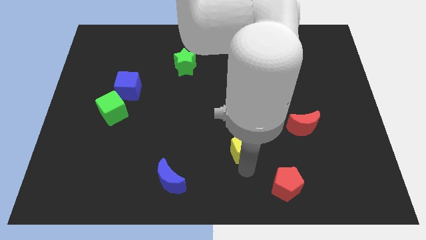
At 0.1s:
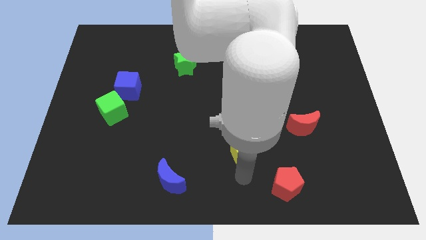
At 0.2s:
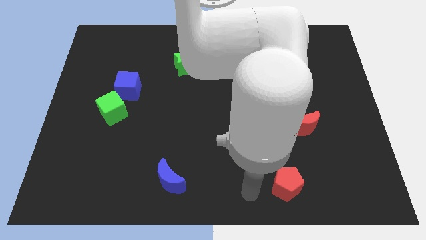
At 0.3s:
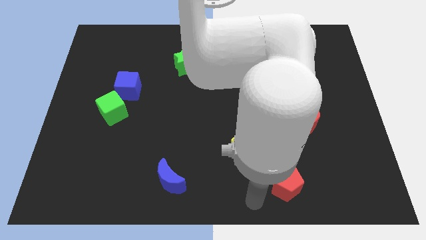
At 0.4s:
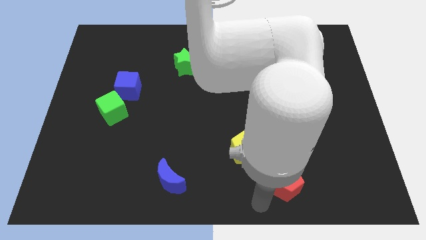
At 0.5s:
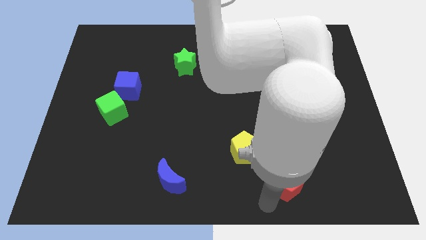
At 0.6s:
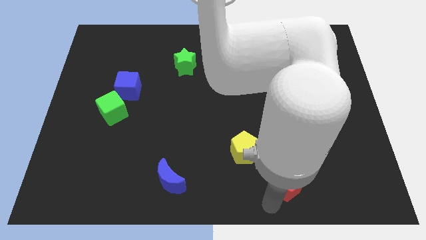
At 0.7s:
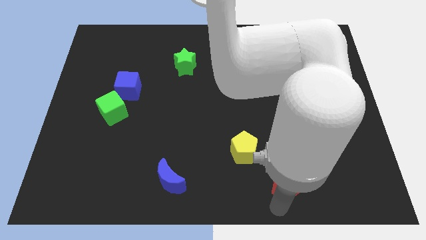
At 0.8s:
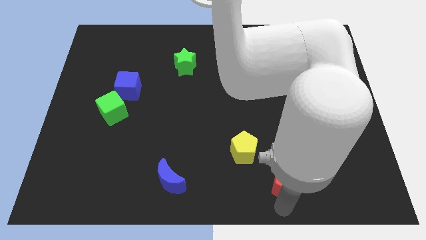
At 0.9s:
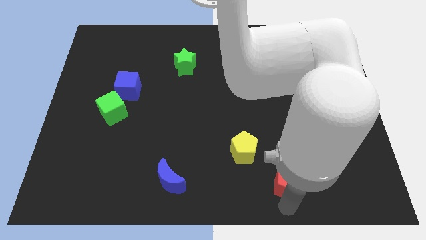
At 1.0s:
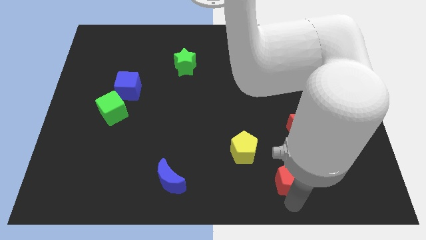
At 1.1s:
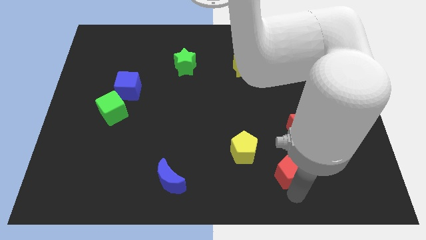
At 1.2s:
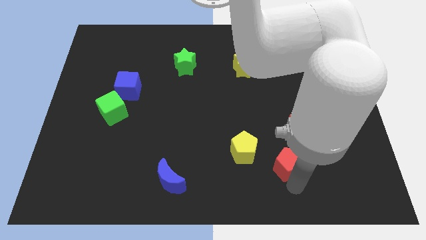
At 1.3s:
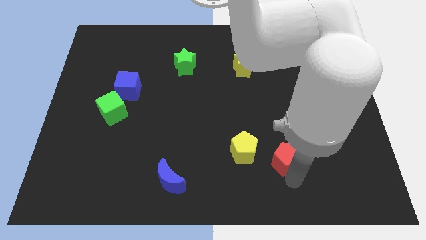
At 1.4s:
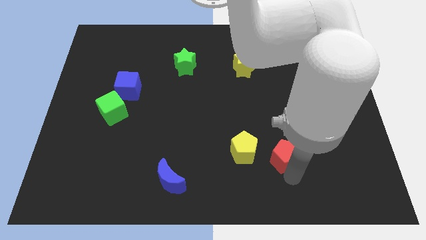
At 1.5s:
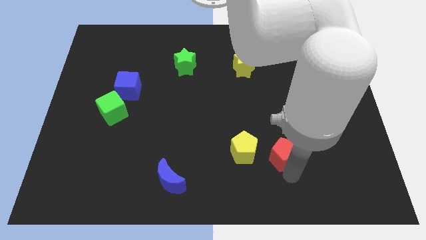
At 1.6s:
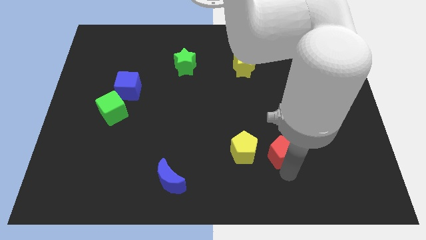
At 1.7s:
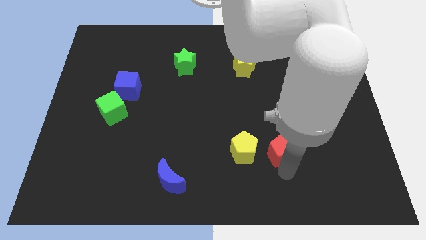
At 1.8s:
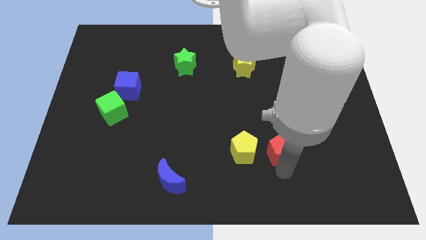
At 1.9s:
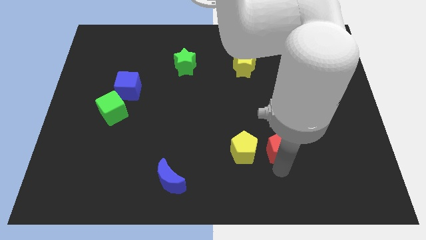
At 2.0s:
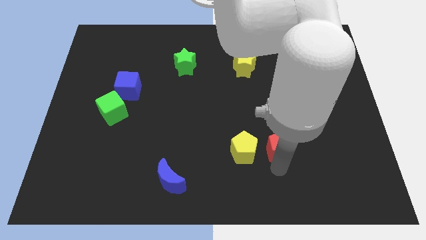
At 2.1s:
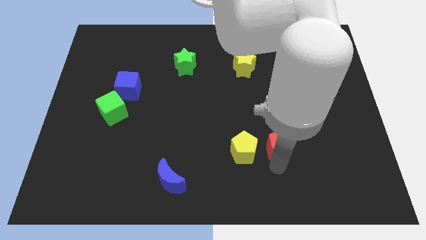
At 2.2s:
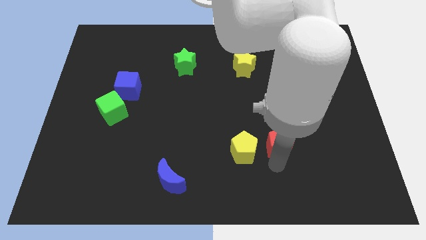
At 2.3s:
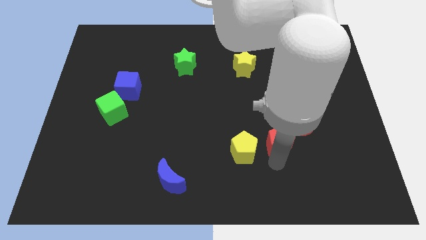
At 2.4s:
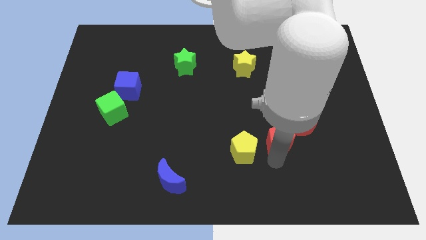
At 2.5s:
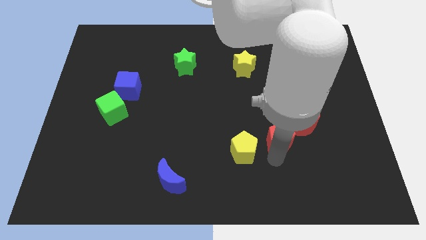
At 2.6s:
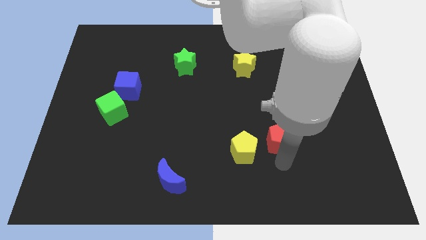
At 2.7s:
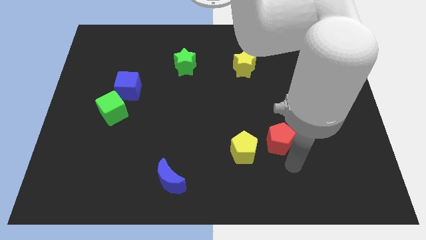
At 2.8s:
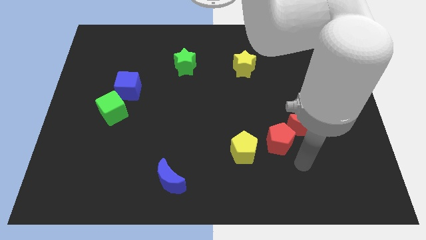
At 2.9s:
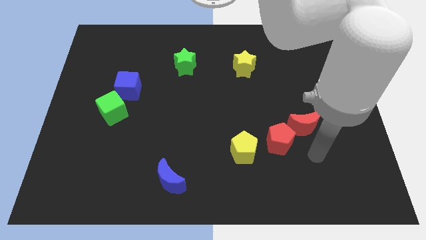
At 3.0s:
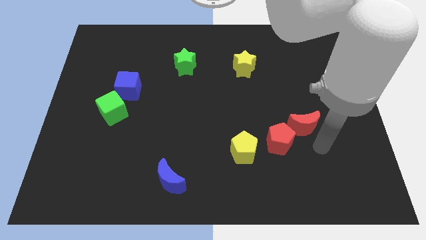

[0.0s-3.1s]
push the red pentagon close to the bottom left of the red crescent

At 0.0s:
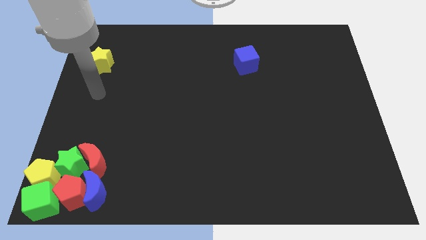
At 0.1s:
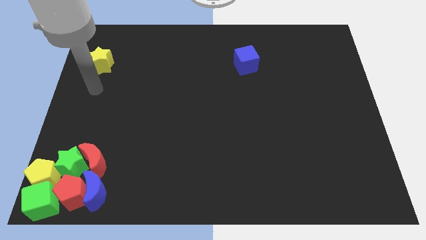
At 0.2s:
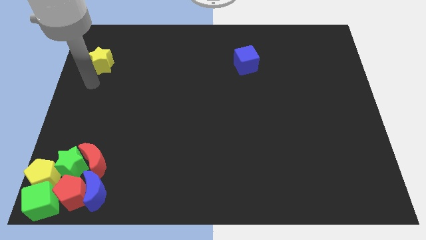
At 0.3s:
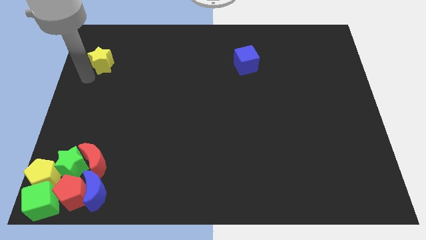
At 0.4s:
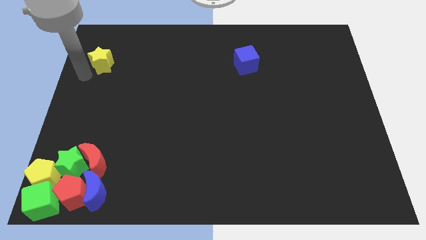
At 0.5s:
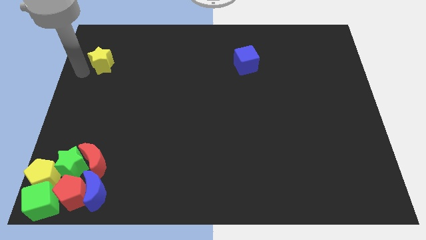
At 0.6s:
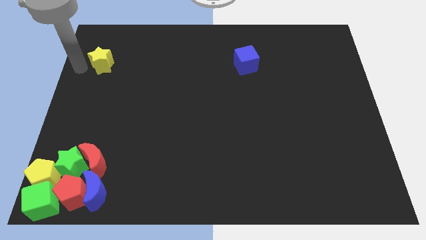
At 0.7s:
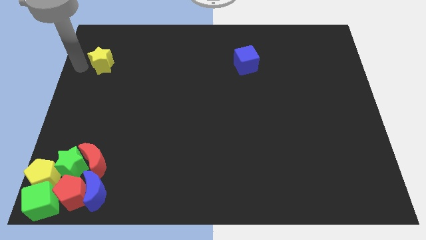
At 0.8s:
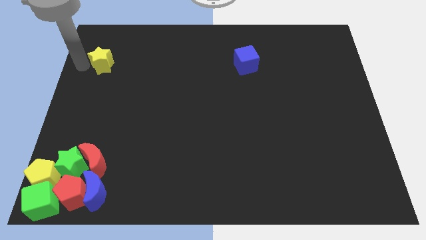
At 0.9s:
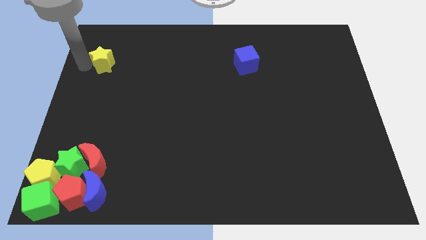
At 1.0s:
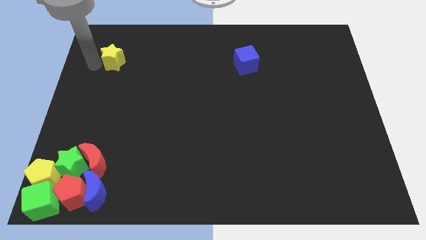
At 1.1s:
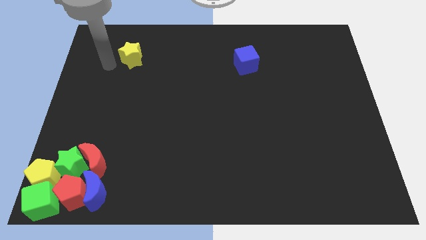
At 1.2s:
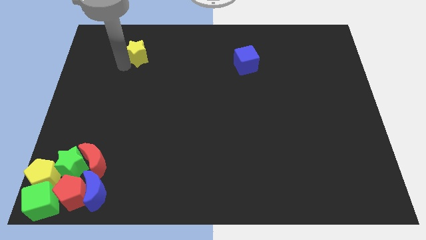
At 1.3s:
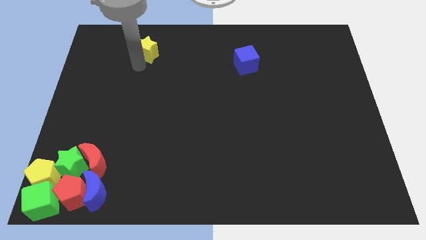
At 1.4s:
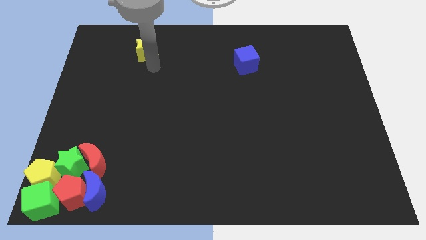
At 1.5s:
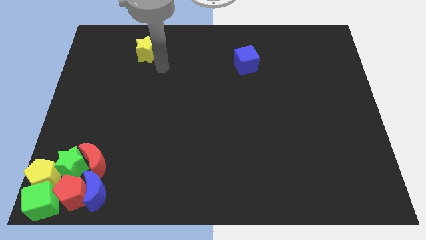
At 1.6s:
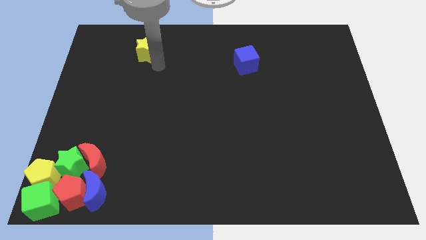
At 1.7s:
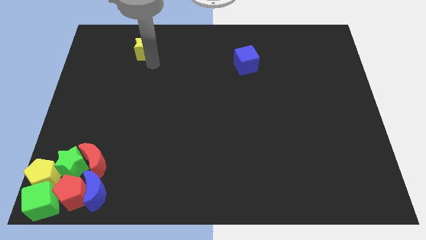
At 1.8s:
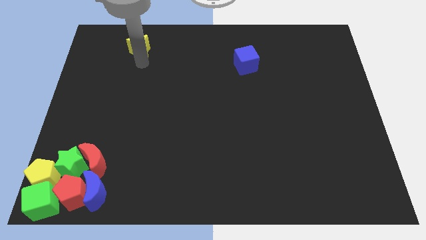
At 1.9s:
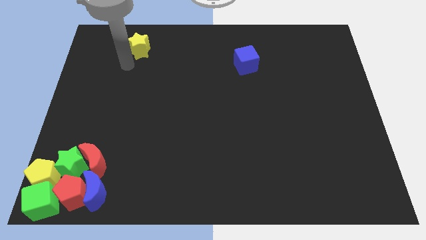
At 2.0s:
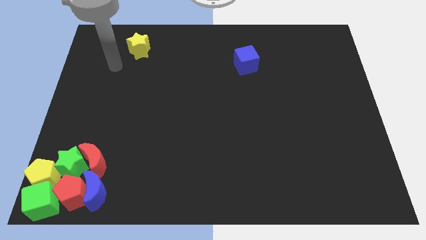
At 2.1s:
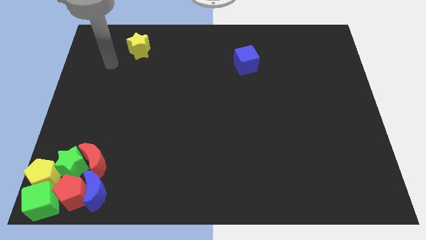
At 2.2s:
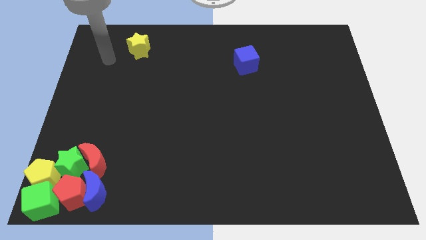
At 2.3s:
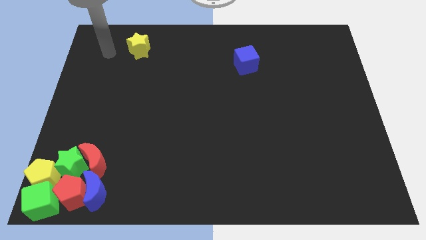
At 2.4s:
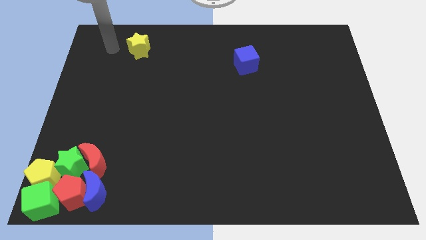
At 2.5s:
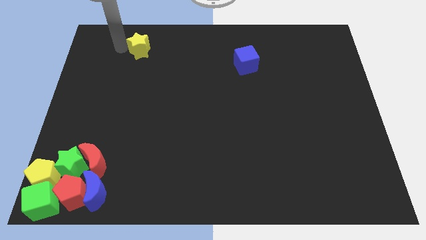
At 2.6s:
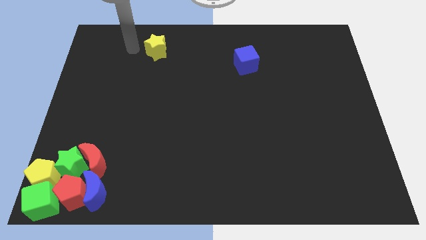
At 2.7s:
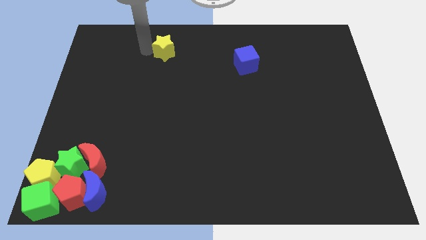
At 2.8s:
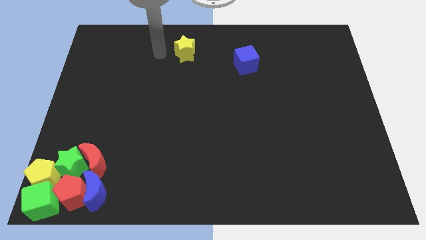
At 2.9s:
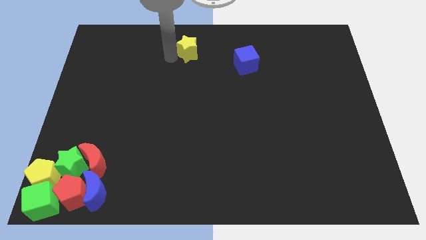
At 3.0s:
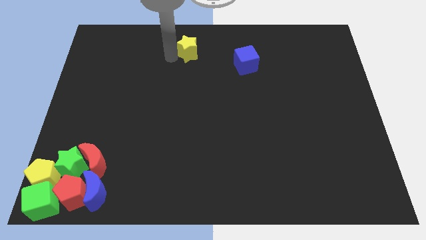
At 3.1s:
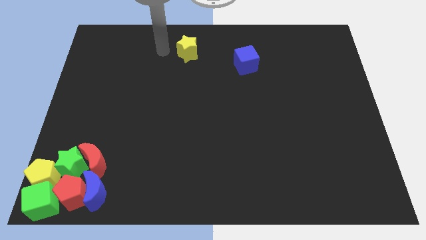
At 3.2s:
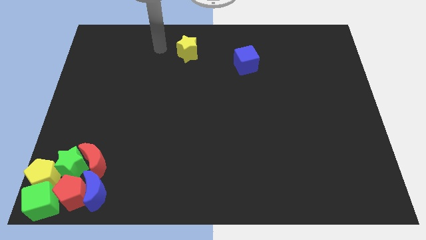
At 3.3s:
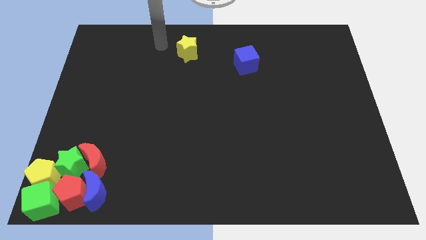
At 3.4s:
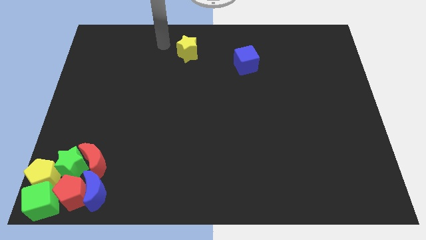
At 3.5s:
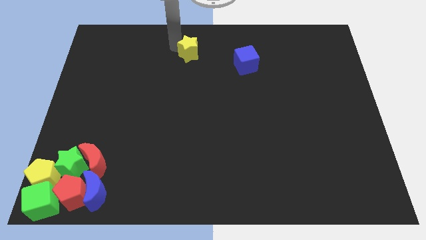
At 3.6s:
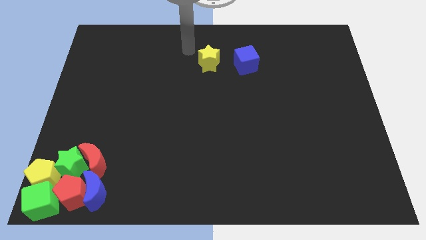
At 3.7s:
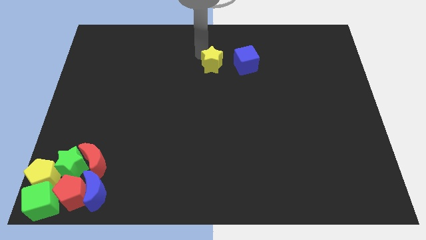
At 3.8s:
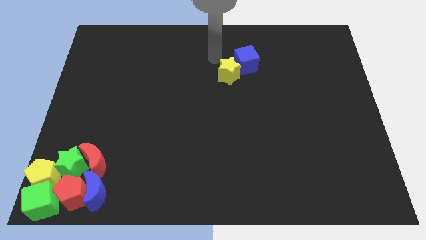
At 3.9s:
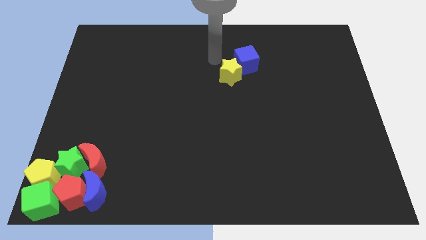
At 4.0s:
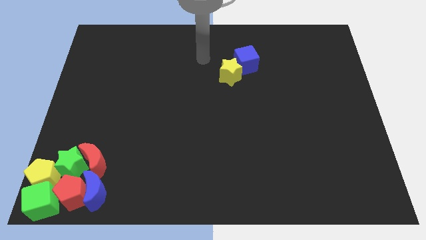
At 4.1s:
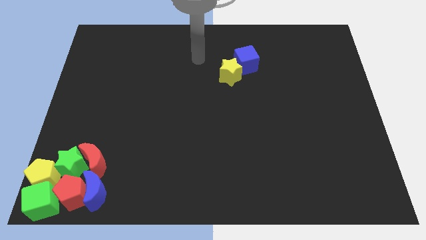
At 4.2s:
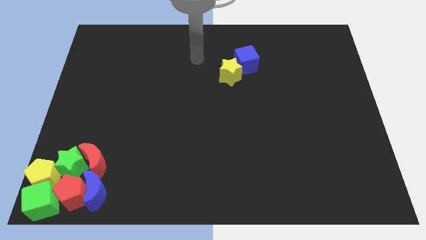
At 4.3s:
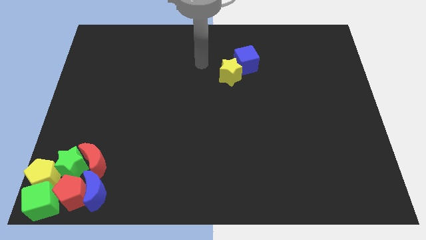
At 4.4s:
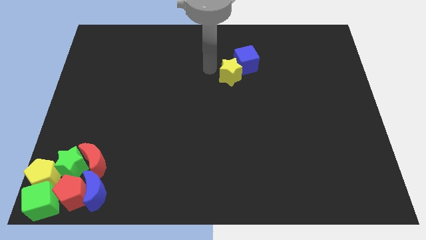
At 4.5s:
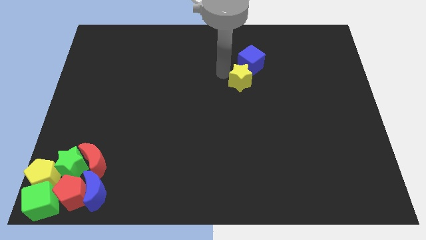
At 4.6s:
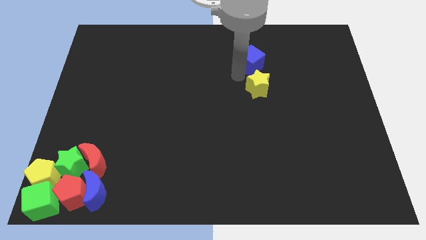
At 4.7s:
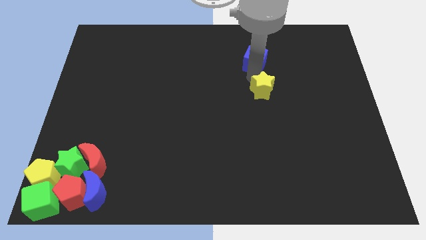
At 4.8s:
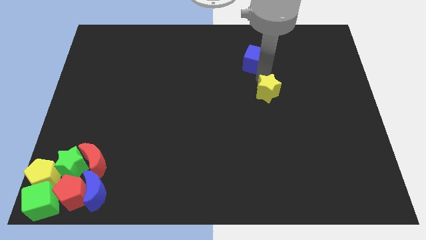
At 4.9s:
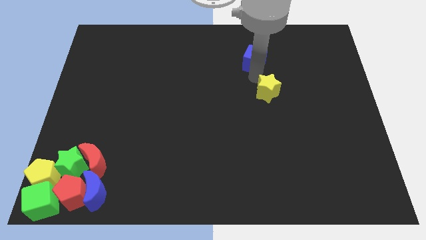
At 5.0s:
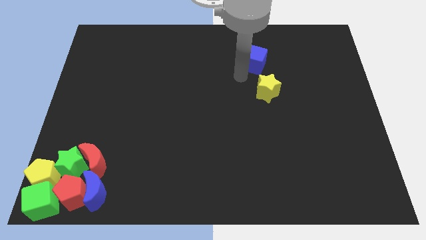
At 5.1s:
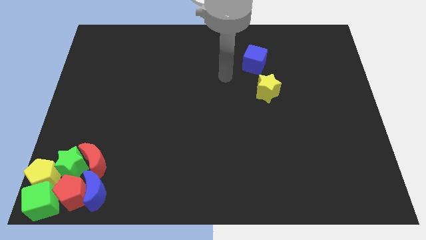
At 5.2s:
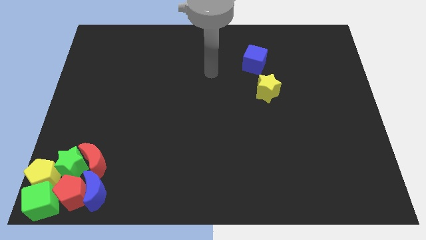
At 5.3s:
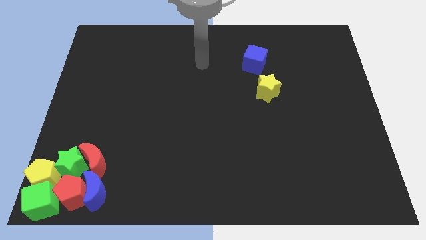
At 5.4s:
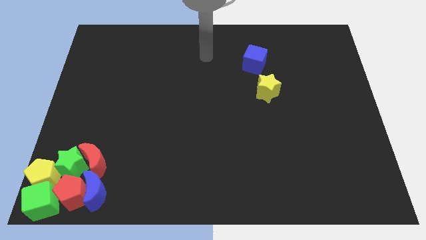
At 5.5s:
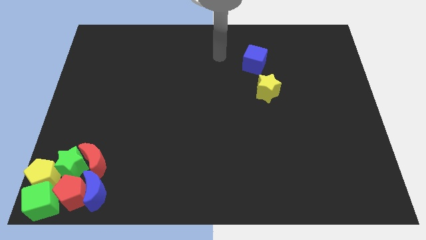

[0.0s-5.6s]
push the yellow star to the bottom of the blue cube

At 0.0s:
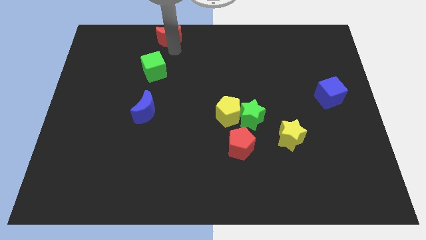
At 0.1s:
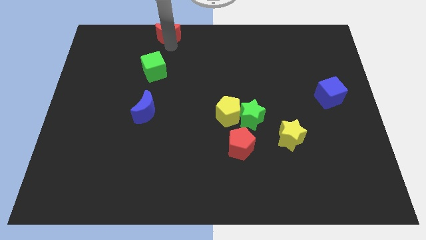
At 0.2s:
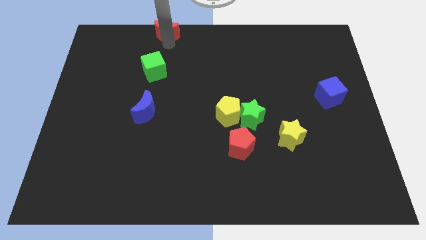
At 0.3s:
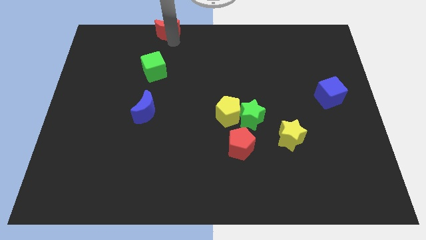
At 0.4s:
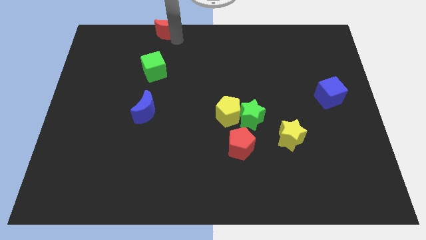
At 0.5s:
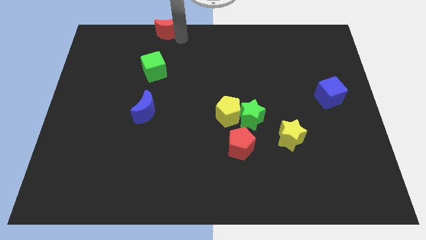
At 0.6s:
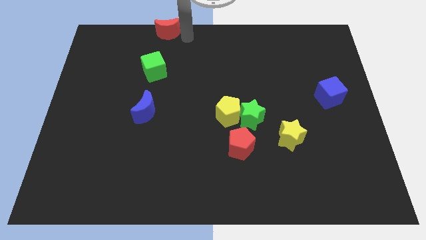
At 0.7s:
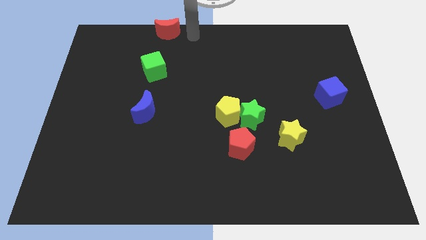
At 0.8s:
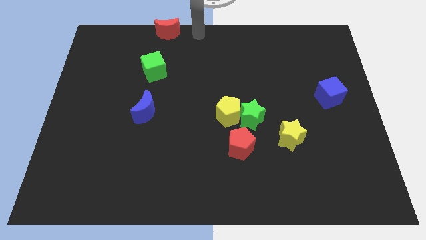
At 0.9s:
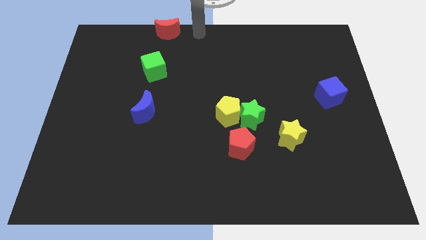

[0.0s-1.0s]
push red moon slightly upwards
